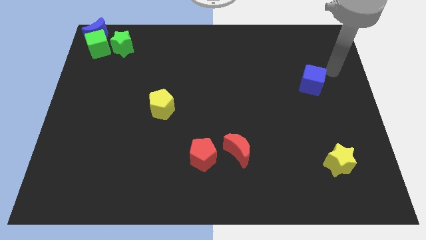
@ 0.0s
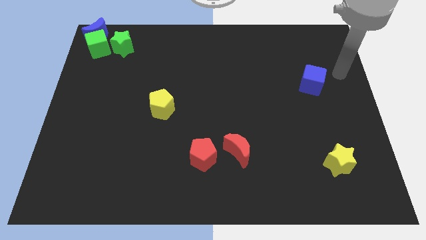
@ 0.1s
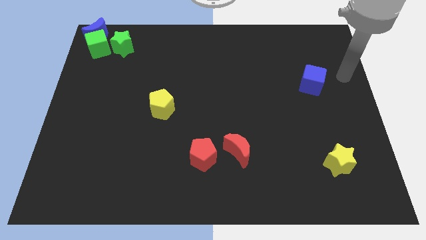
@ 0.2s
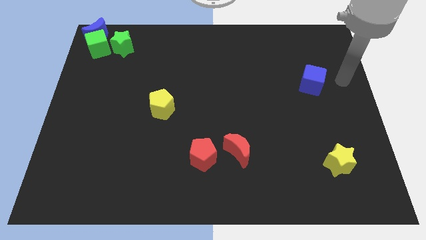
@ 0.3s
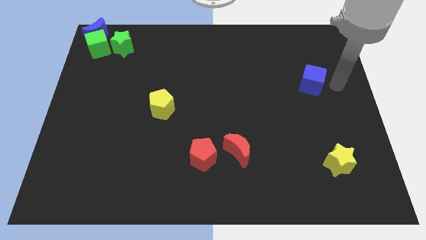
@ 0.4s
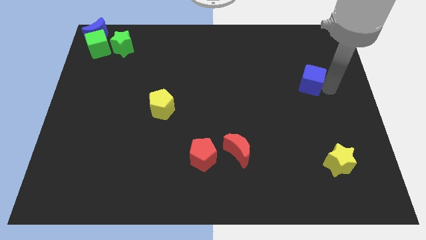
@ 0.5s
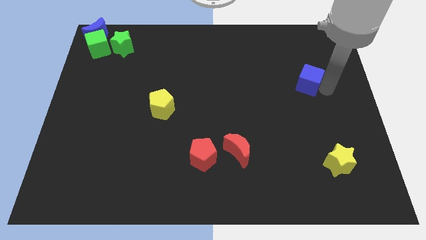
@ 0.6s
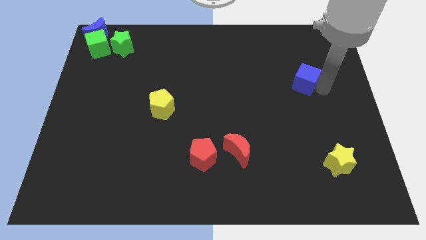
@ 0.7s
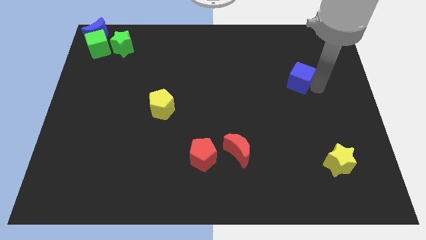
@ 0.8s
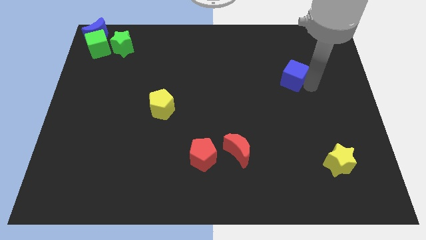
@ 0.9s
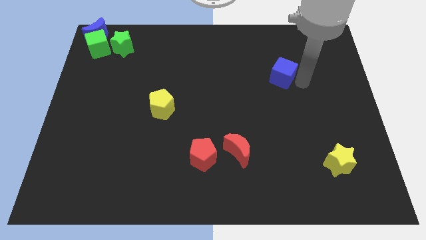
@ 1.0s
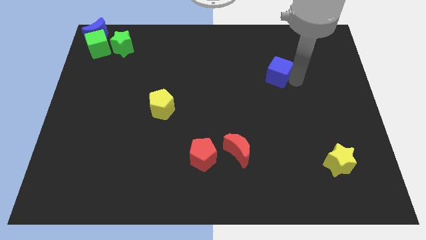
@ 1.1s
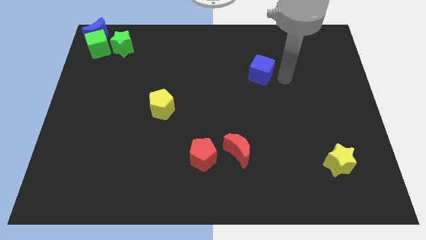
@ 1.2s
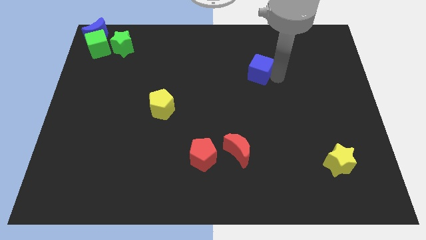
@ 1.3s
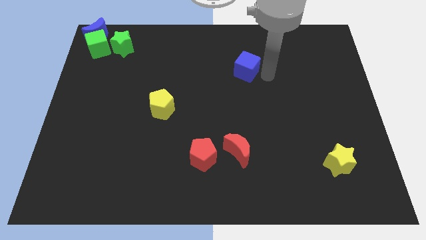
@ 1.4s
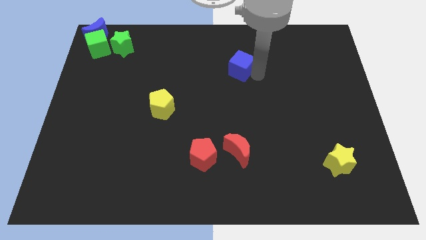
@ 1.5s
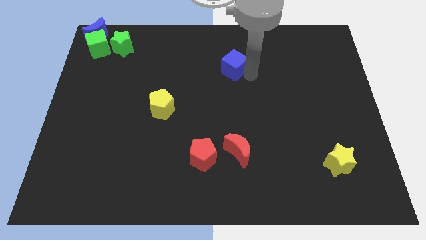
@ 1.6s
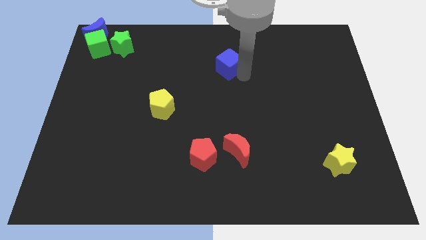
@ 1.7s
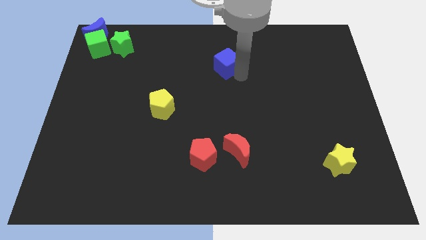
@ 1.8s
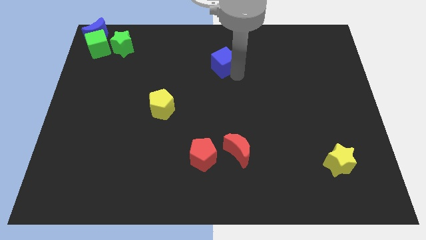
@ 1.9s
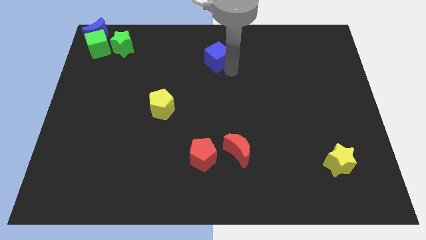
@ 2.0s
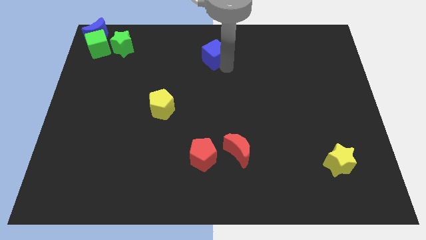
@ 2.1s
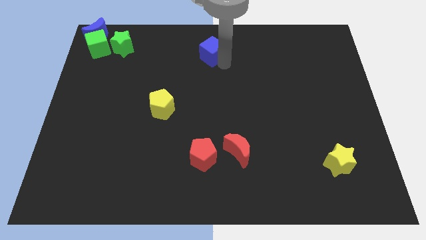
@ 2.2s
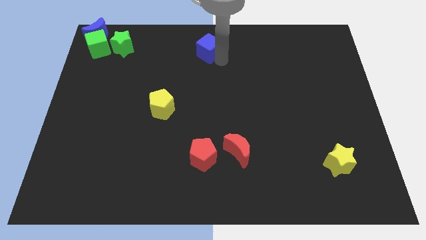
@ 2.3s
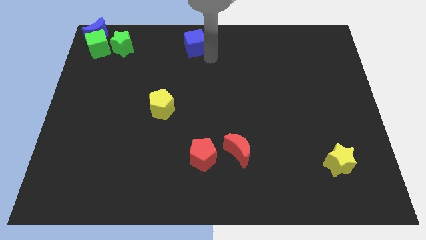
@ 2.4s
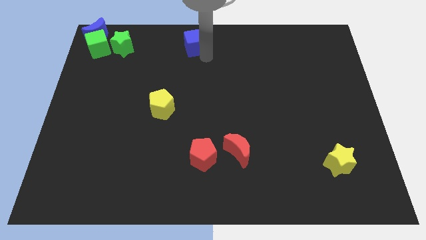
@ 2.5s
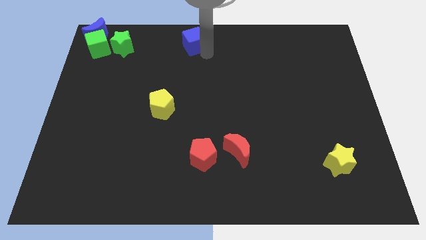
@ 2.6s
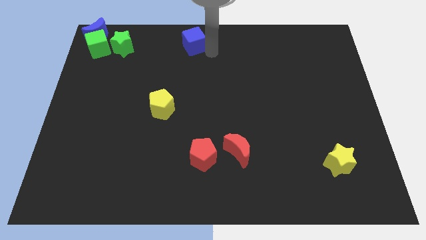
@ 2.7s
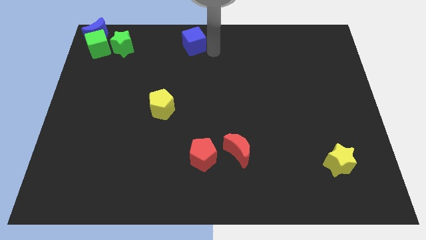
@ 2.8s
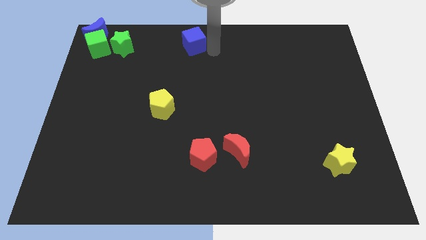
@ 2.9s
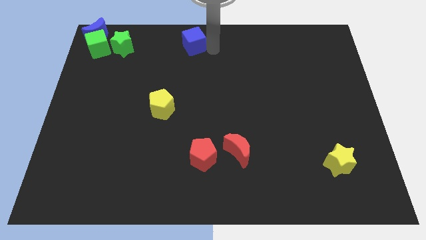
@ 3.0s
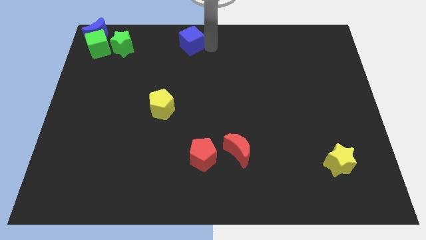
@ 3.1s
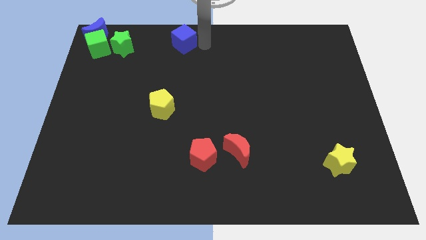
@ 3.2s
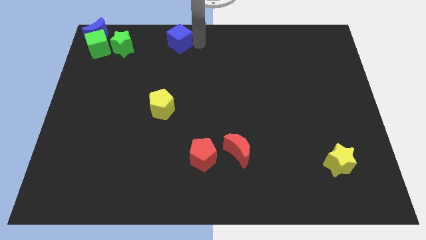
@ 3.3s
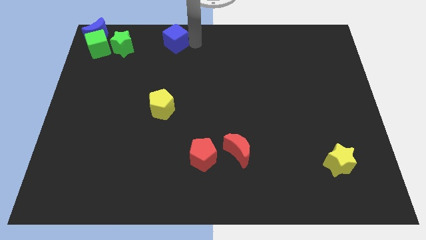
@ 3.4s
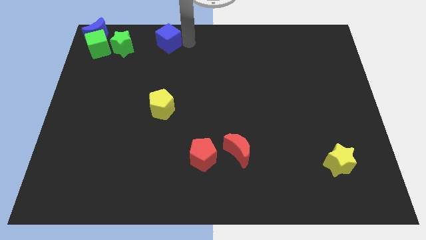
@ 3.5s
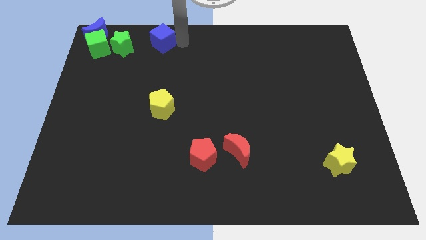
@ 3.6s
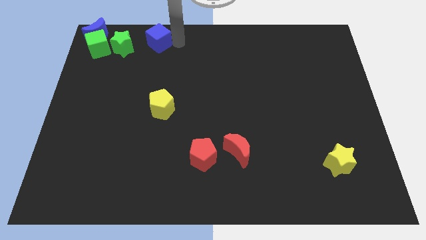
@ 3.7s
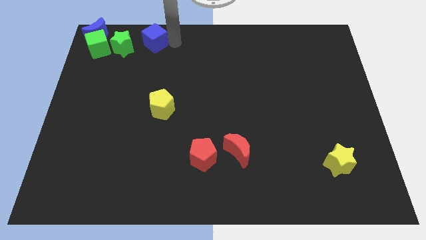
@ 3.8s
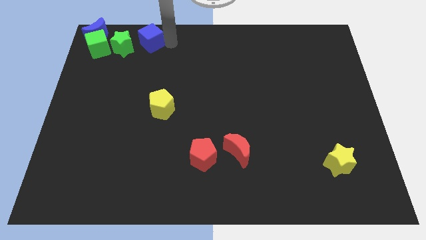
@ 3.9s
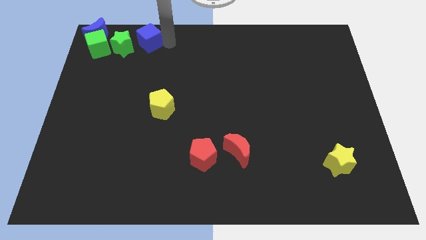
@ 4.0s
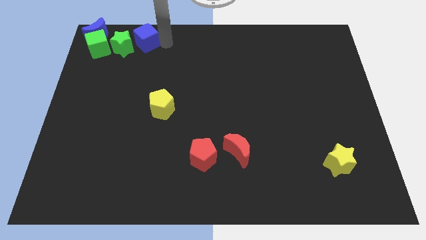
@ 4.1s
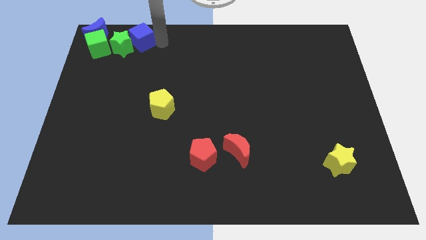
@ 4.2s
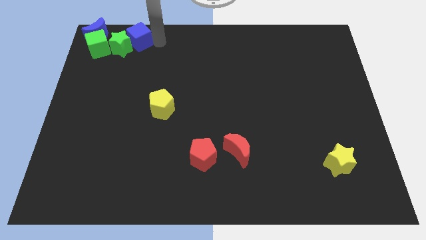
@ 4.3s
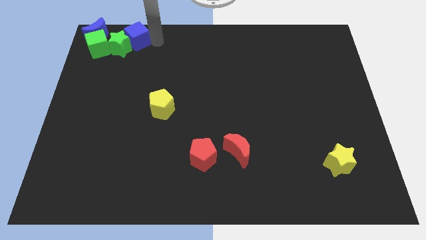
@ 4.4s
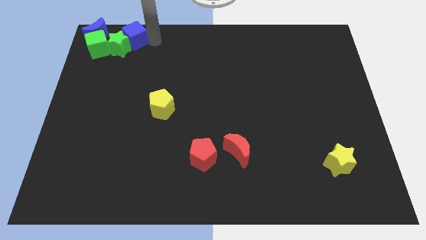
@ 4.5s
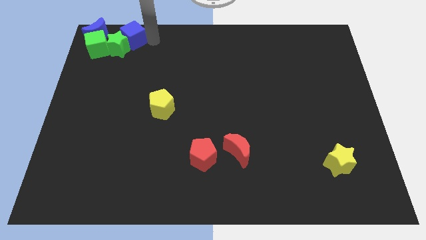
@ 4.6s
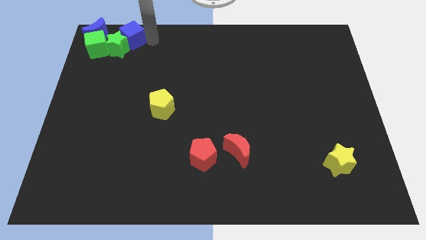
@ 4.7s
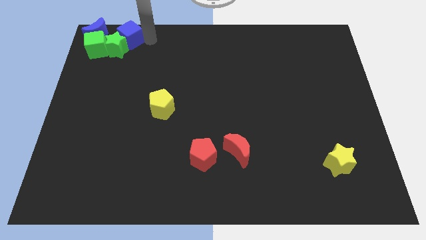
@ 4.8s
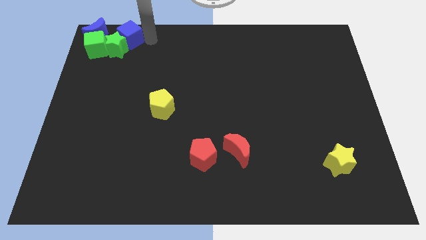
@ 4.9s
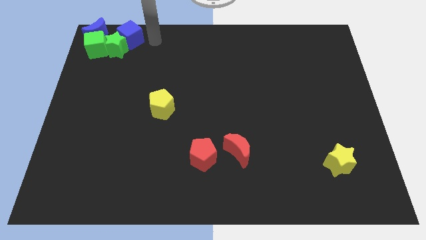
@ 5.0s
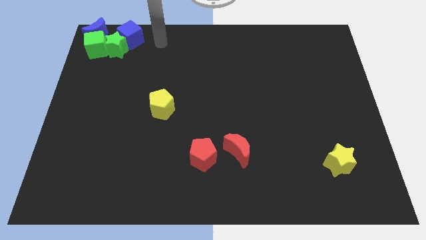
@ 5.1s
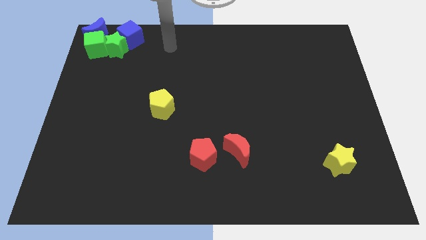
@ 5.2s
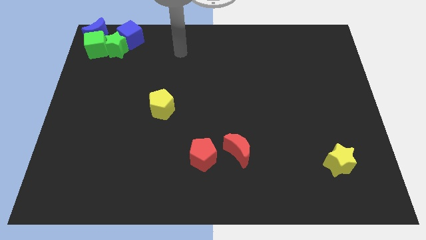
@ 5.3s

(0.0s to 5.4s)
place the blue cube to the top left corner of the board

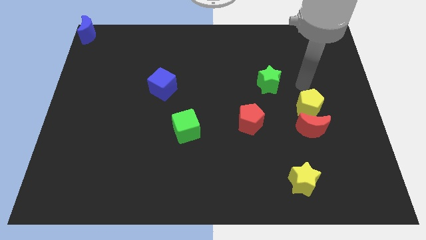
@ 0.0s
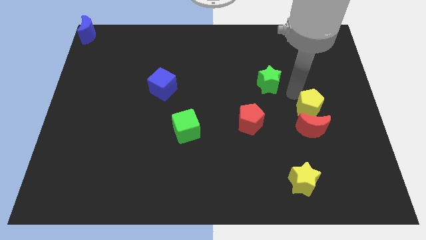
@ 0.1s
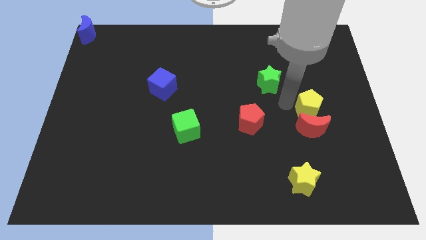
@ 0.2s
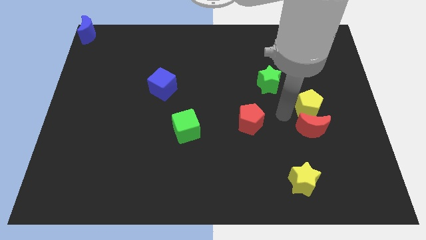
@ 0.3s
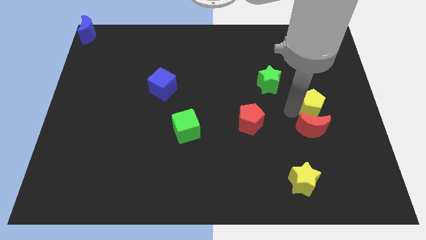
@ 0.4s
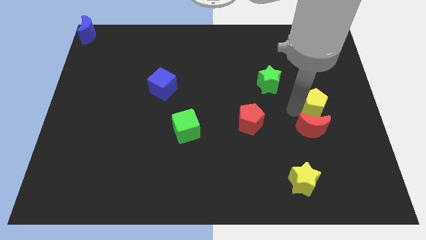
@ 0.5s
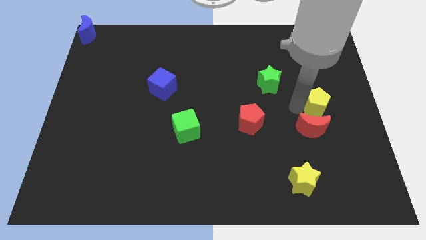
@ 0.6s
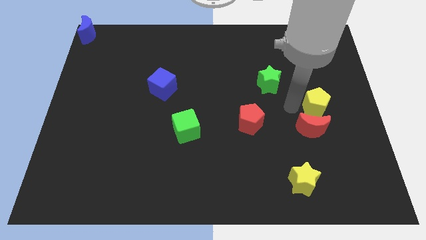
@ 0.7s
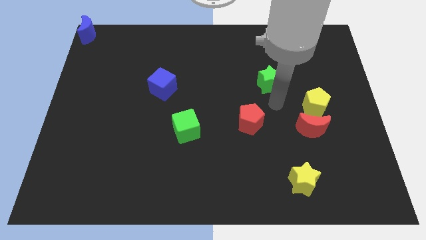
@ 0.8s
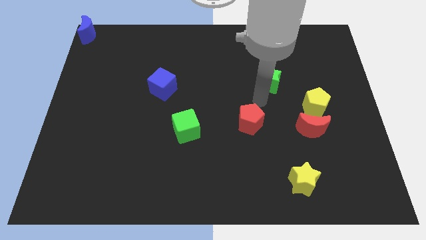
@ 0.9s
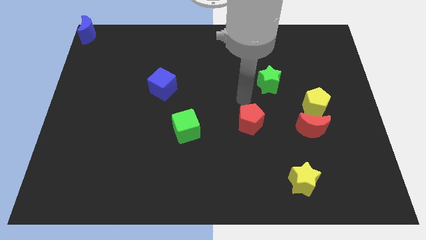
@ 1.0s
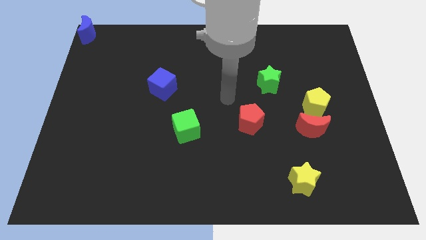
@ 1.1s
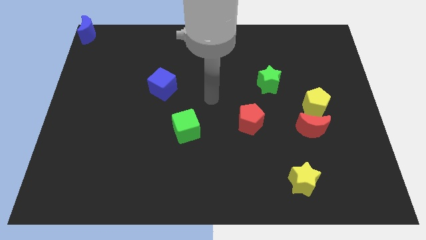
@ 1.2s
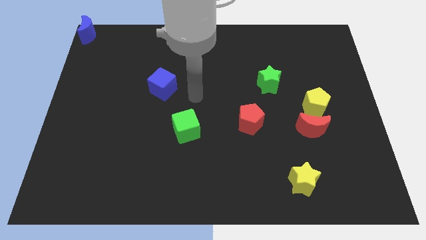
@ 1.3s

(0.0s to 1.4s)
place the yellow pentagon to the top side of the red crescent

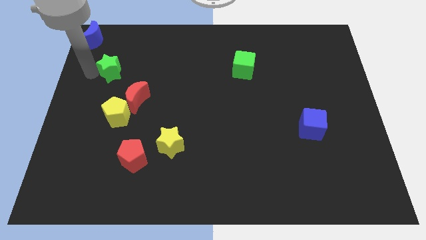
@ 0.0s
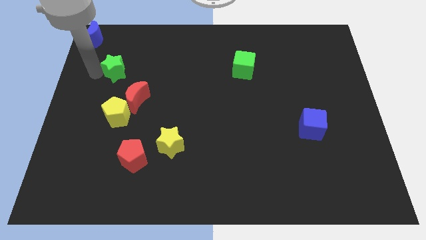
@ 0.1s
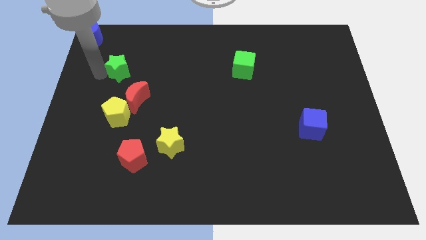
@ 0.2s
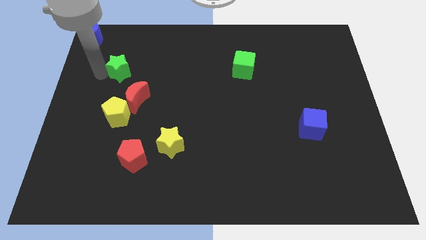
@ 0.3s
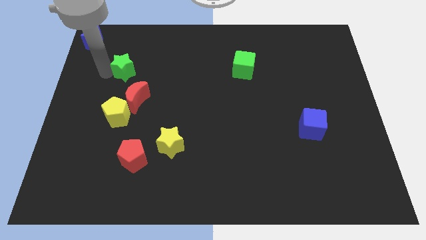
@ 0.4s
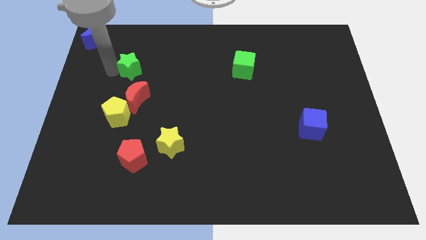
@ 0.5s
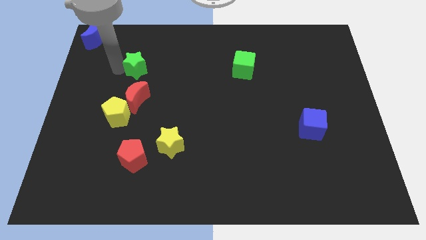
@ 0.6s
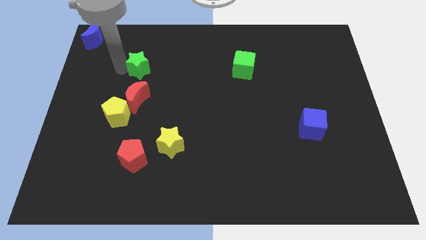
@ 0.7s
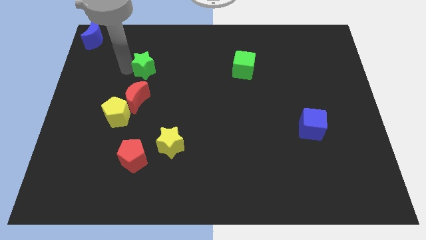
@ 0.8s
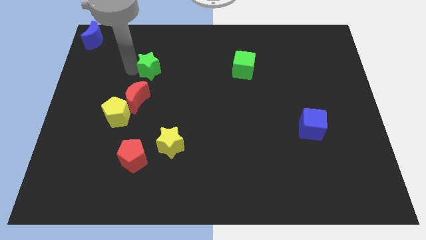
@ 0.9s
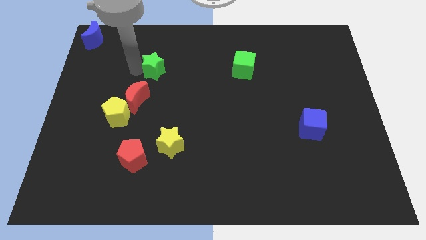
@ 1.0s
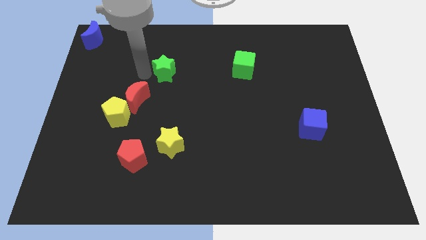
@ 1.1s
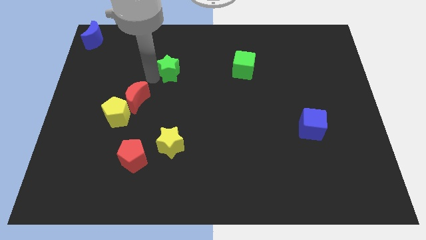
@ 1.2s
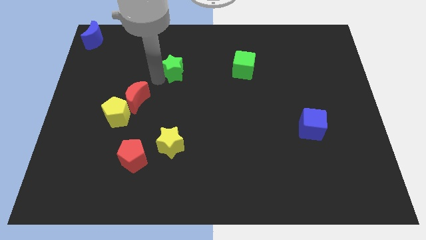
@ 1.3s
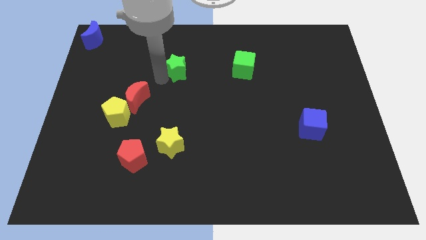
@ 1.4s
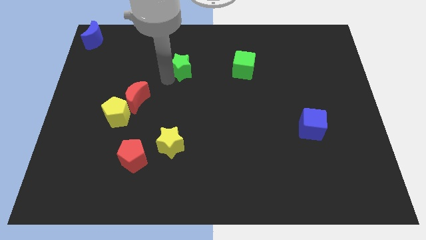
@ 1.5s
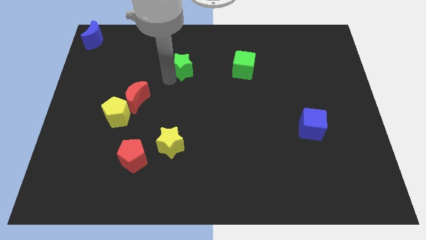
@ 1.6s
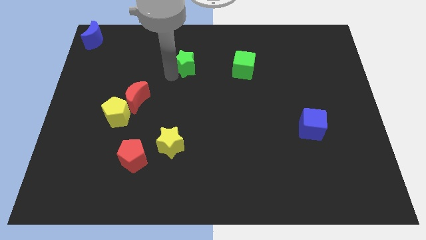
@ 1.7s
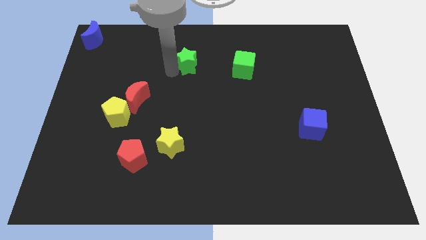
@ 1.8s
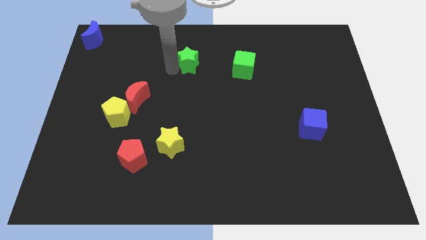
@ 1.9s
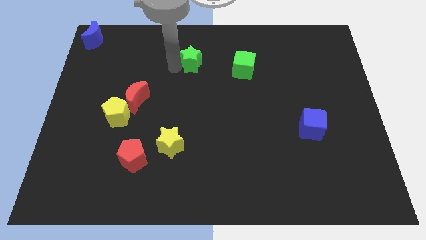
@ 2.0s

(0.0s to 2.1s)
push the green star to the left of the green cube

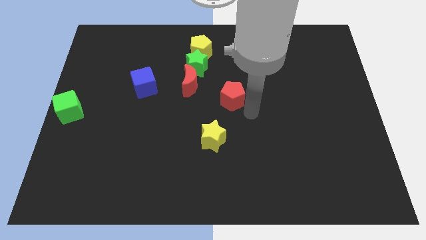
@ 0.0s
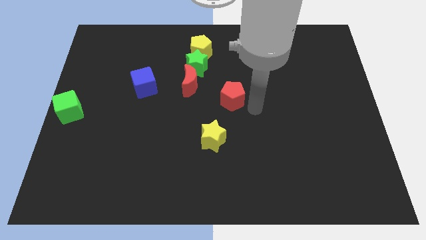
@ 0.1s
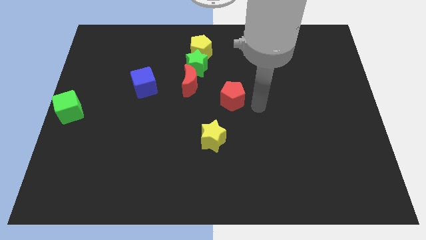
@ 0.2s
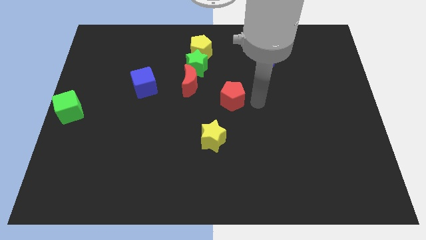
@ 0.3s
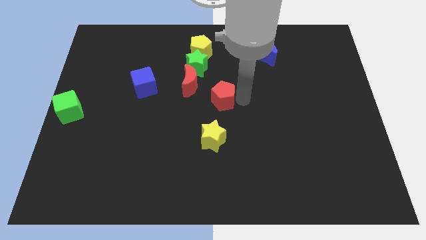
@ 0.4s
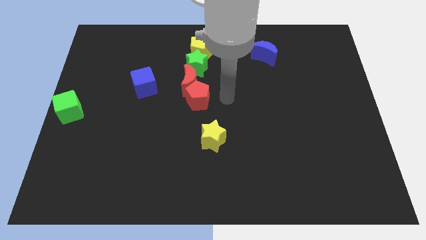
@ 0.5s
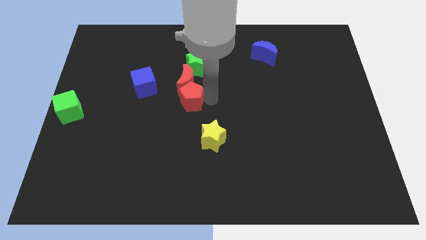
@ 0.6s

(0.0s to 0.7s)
push the red pentagon into the red moon
